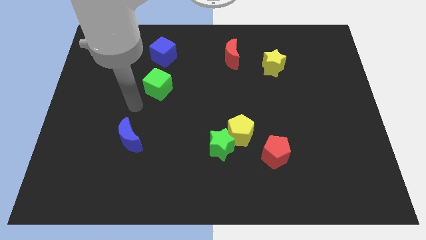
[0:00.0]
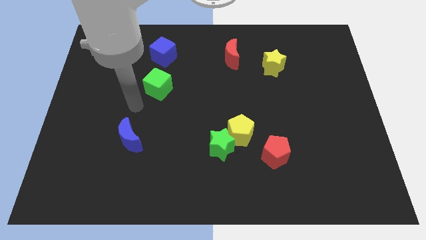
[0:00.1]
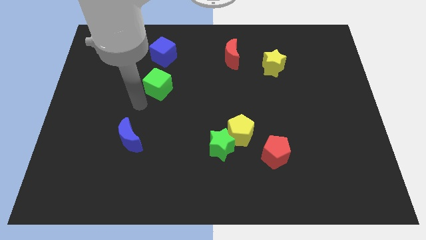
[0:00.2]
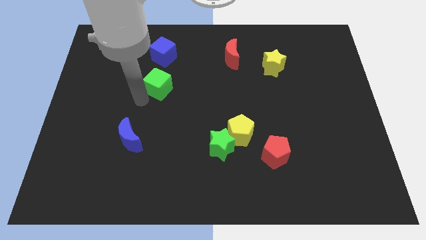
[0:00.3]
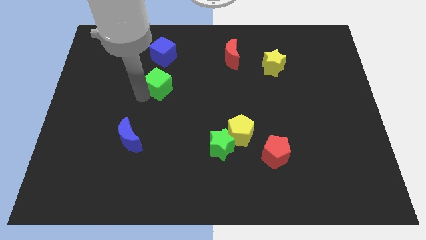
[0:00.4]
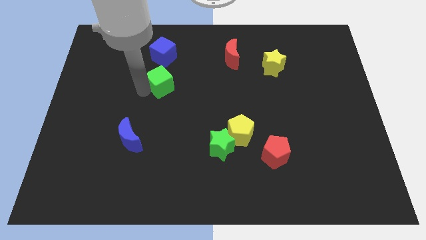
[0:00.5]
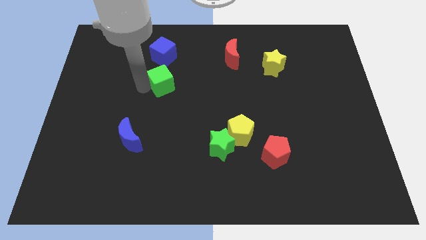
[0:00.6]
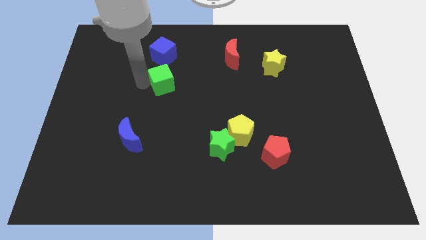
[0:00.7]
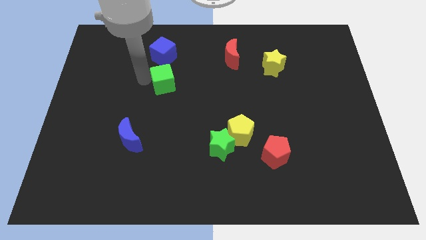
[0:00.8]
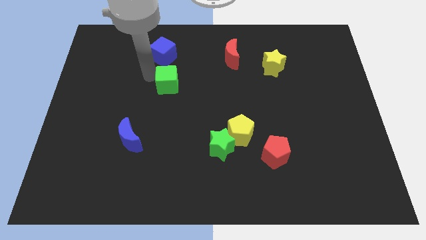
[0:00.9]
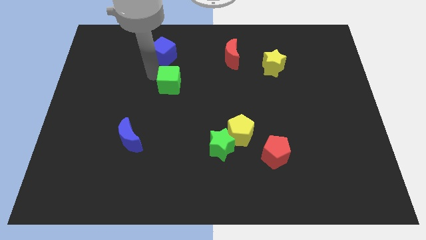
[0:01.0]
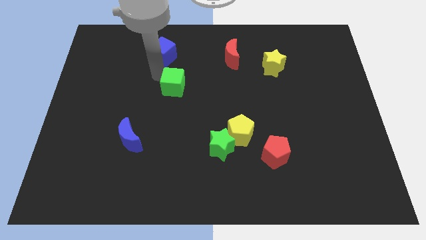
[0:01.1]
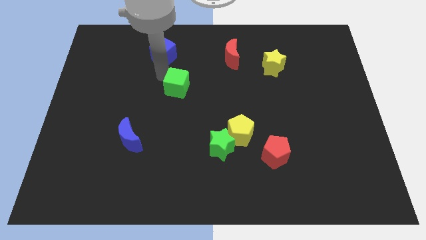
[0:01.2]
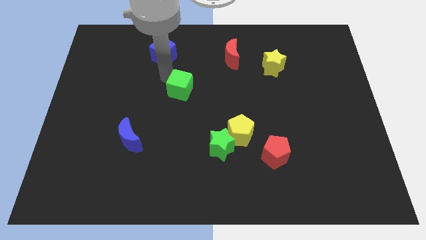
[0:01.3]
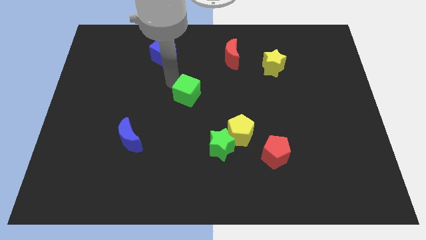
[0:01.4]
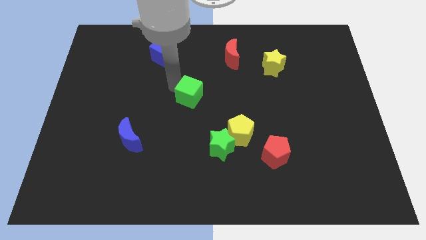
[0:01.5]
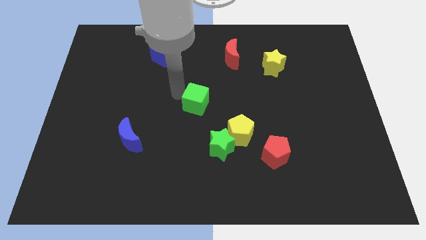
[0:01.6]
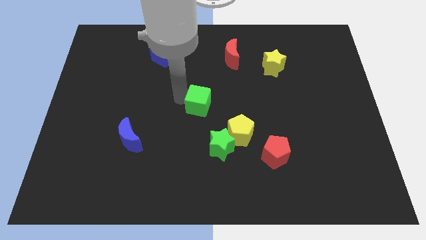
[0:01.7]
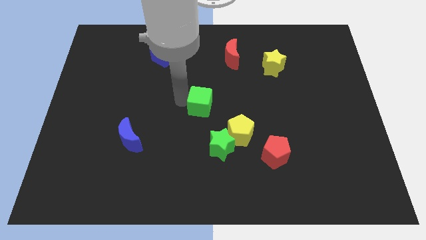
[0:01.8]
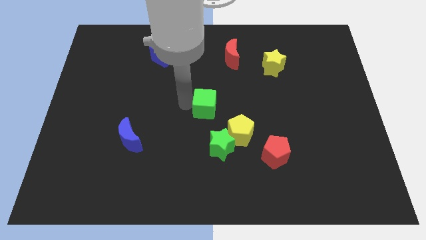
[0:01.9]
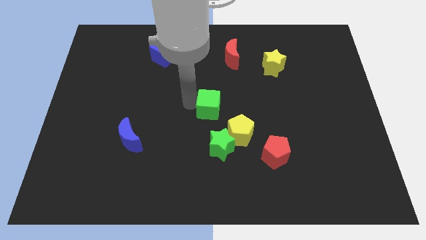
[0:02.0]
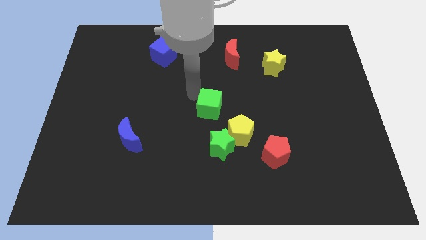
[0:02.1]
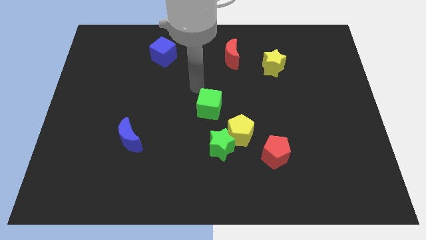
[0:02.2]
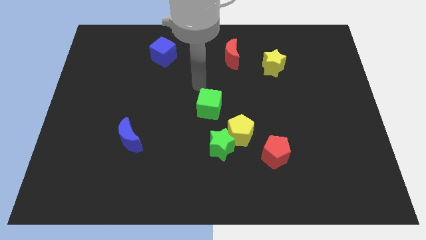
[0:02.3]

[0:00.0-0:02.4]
push the green cube to the center of board

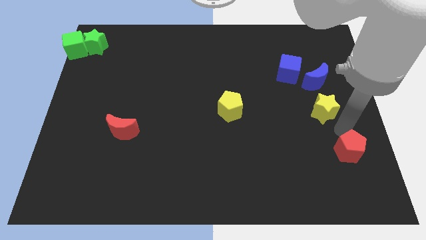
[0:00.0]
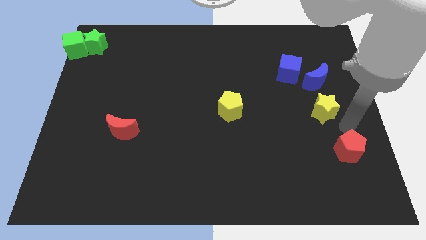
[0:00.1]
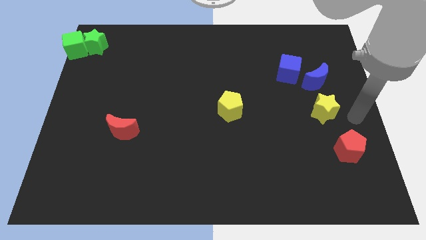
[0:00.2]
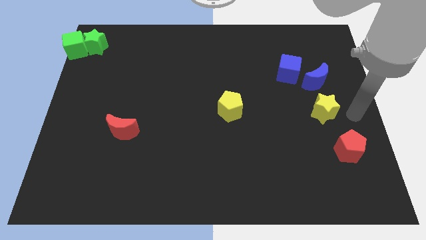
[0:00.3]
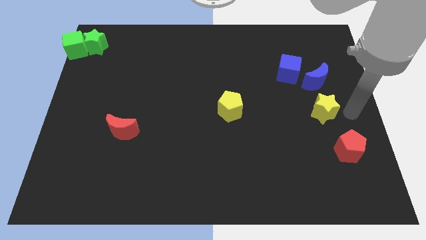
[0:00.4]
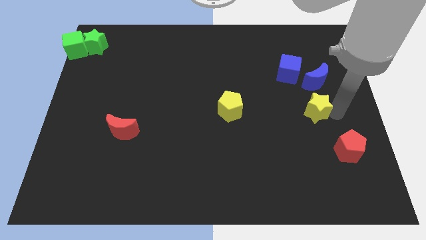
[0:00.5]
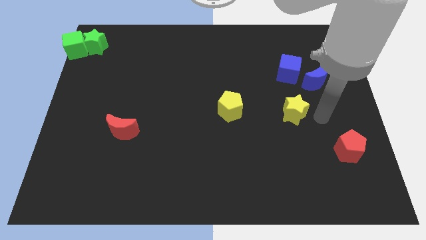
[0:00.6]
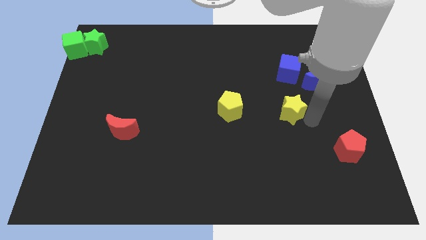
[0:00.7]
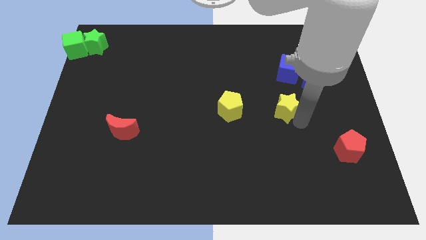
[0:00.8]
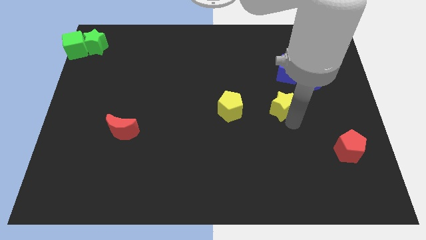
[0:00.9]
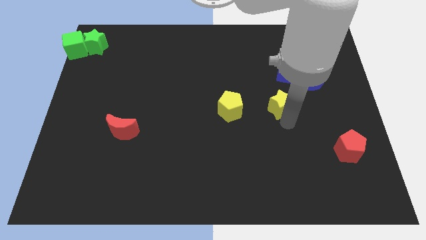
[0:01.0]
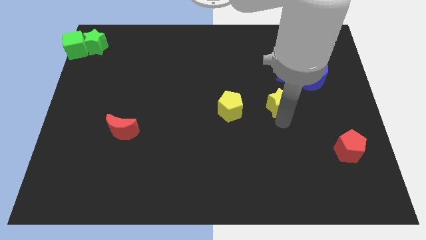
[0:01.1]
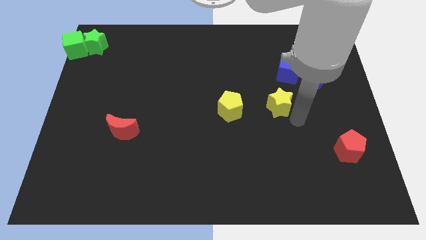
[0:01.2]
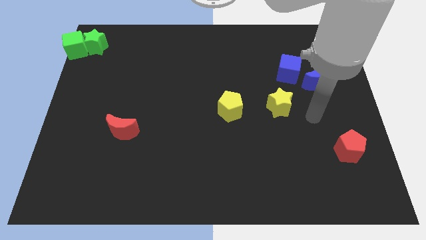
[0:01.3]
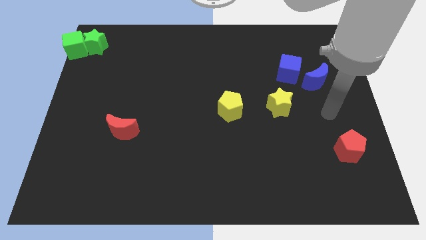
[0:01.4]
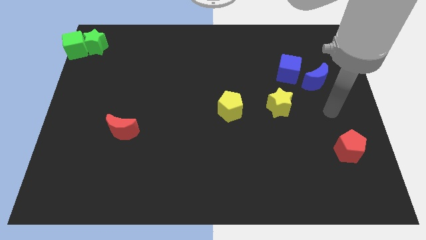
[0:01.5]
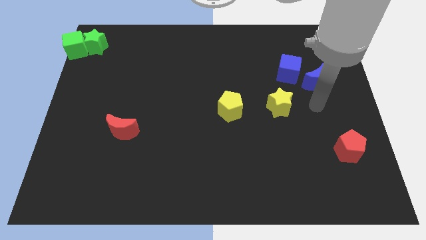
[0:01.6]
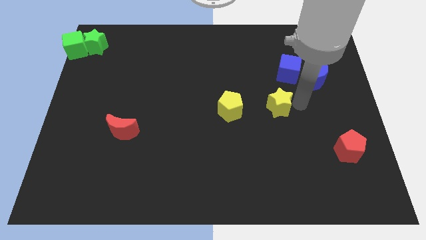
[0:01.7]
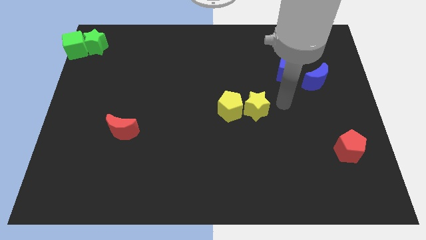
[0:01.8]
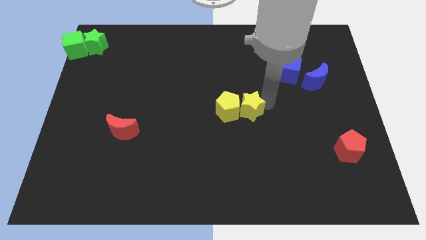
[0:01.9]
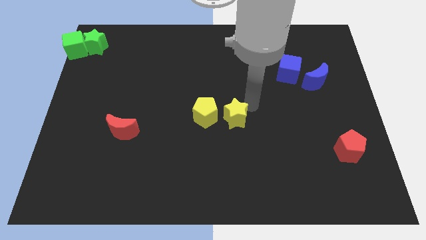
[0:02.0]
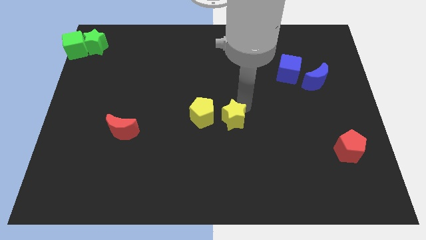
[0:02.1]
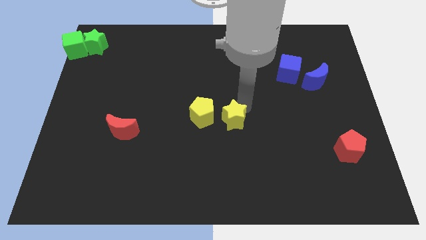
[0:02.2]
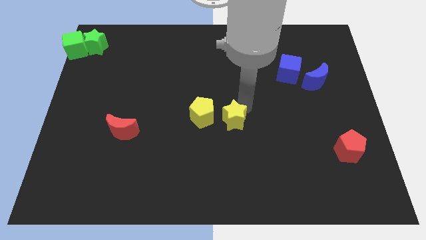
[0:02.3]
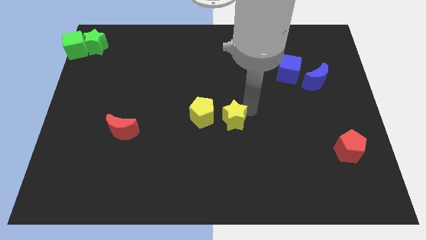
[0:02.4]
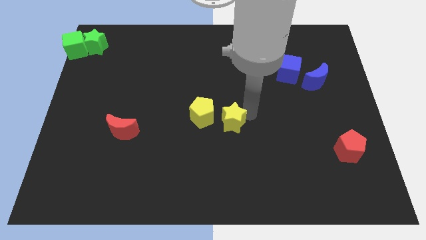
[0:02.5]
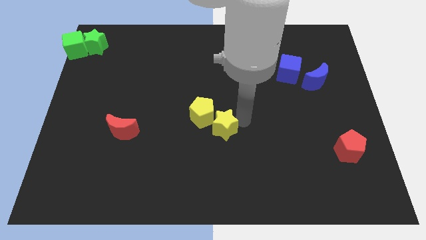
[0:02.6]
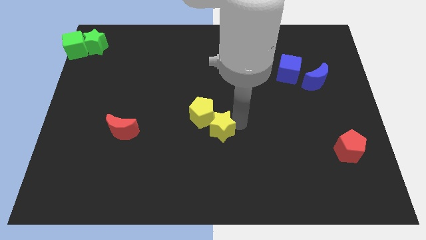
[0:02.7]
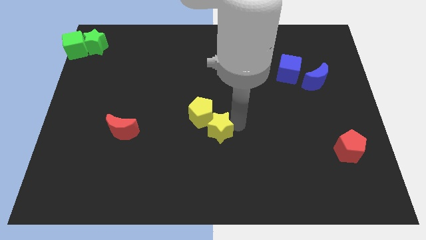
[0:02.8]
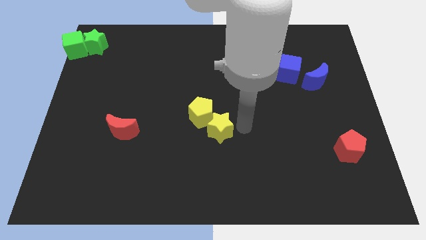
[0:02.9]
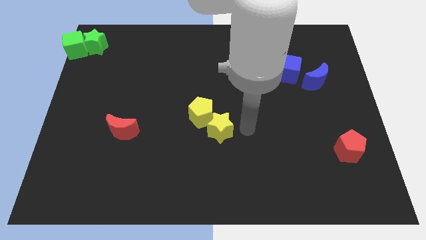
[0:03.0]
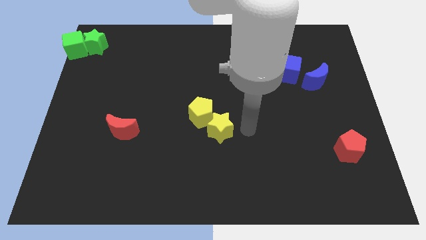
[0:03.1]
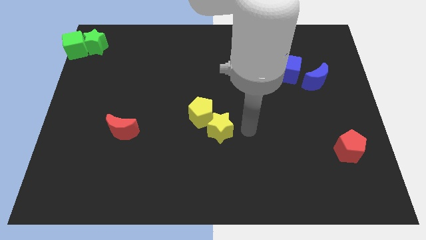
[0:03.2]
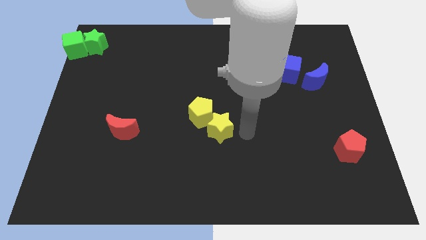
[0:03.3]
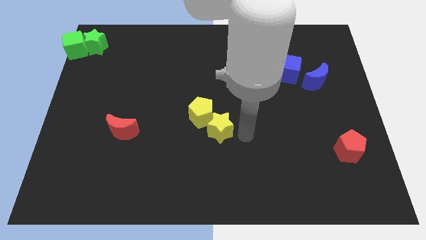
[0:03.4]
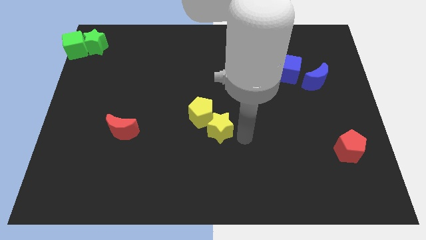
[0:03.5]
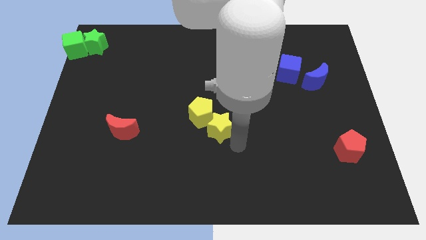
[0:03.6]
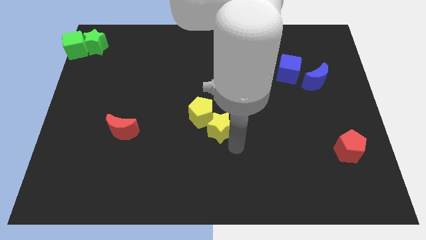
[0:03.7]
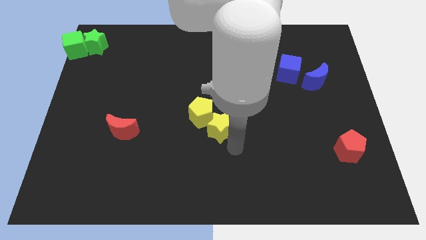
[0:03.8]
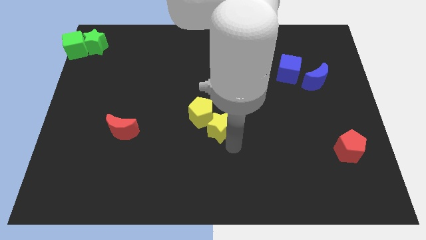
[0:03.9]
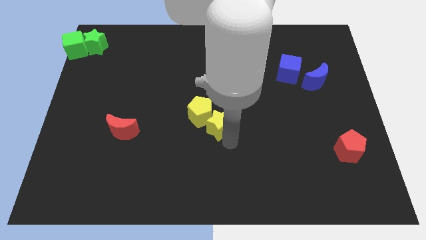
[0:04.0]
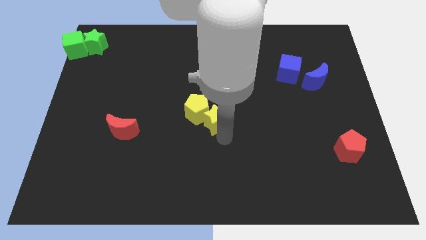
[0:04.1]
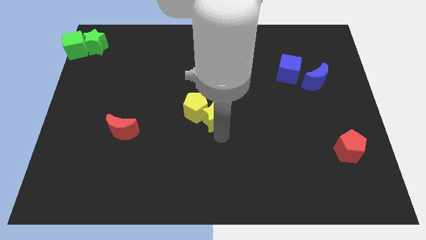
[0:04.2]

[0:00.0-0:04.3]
push the yellow blocks to the center of the board

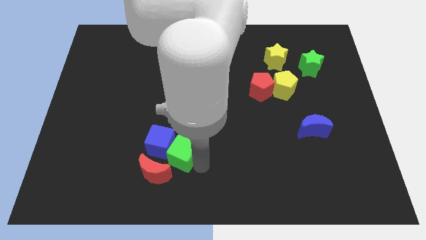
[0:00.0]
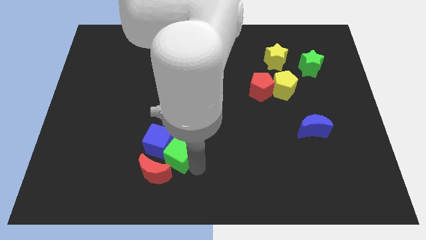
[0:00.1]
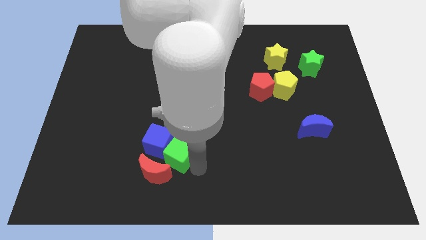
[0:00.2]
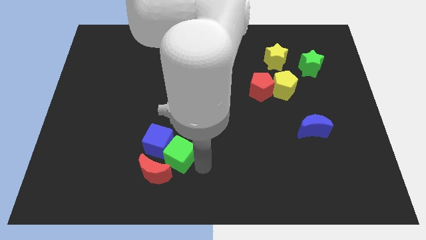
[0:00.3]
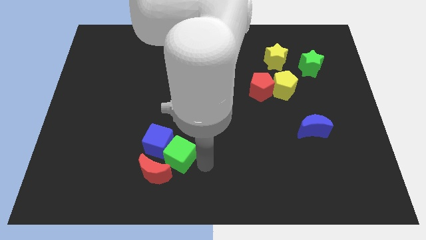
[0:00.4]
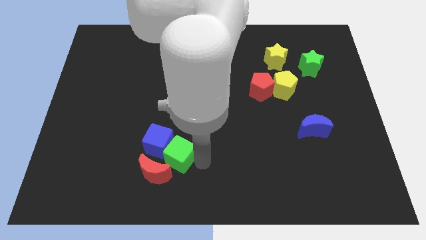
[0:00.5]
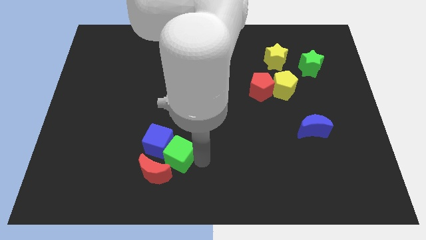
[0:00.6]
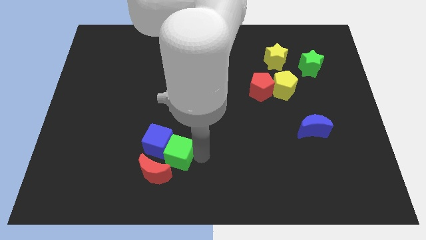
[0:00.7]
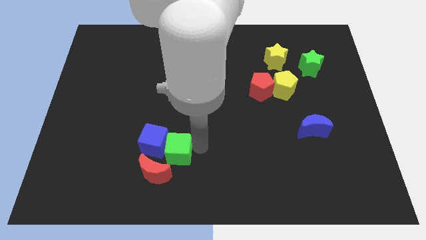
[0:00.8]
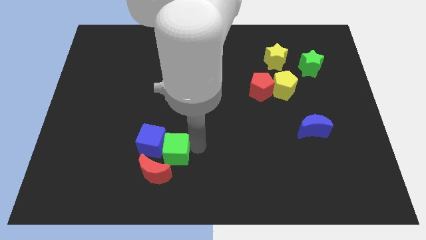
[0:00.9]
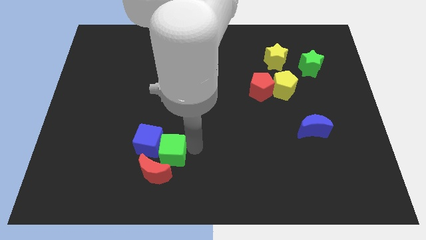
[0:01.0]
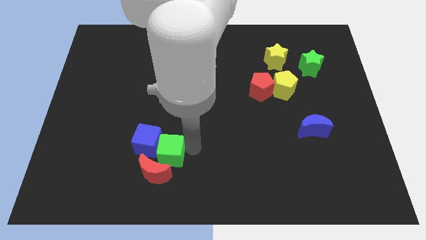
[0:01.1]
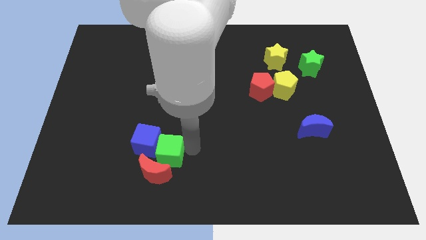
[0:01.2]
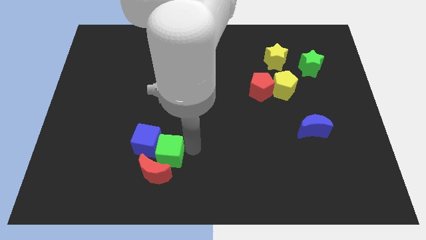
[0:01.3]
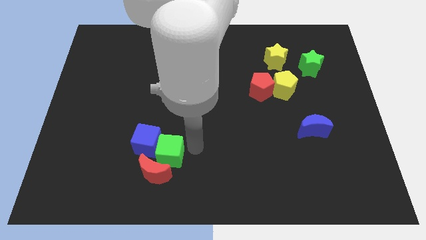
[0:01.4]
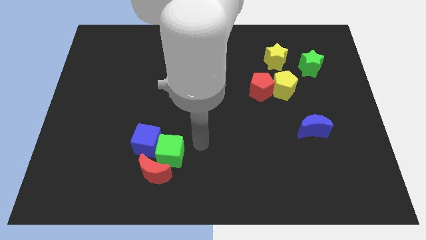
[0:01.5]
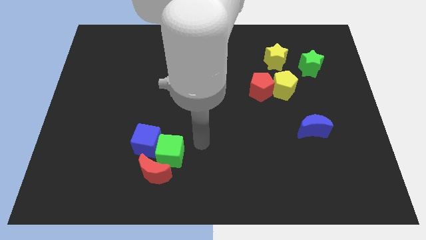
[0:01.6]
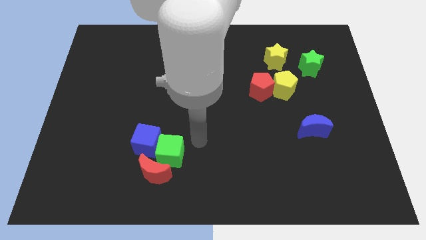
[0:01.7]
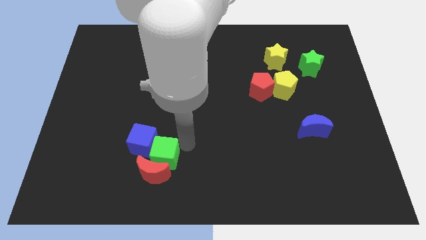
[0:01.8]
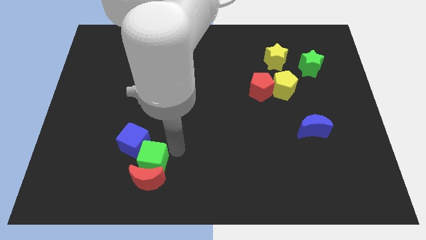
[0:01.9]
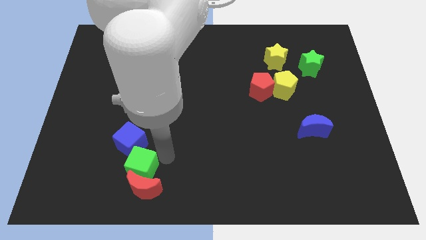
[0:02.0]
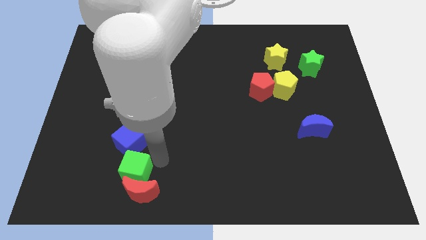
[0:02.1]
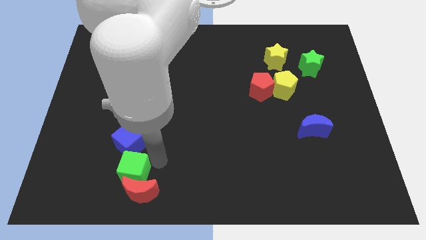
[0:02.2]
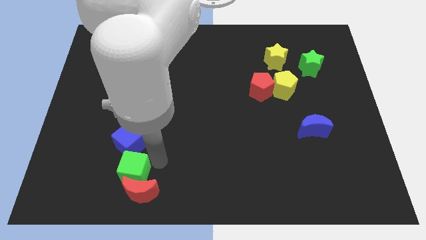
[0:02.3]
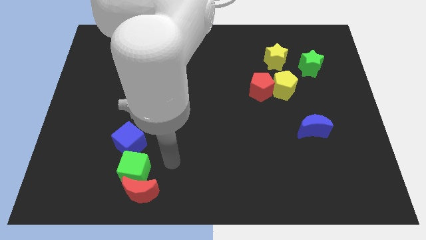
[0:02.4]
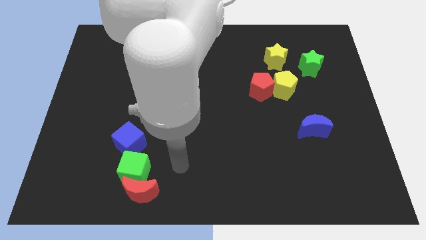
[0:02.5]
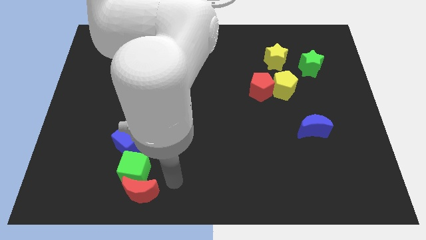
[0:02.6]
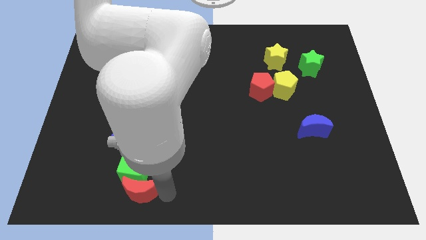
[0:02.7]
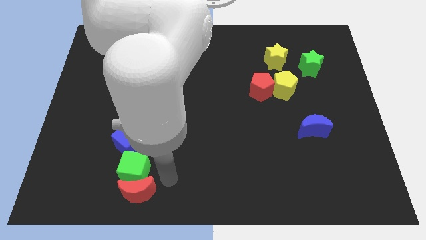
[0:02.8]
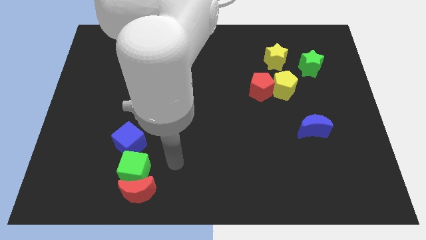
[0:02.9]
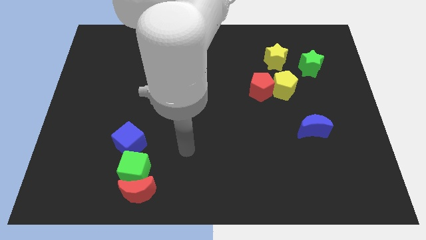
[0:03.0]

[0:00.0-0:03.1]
place green cube between blue cube and red moon
